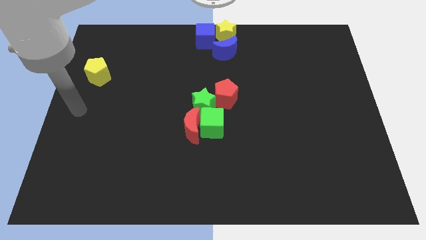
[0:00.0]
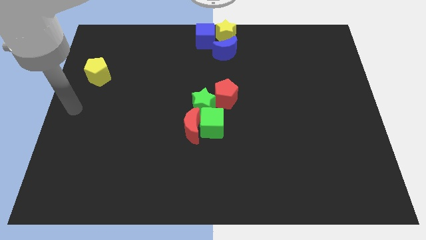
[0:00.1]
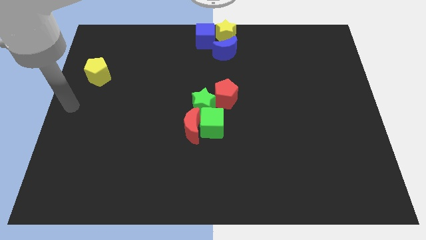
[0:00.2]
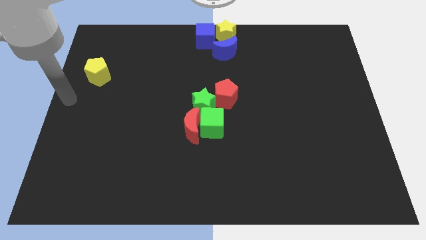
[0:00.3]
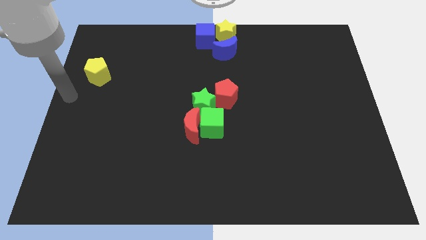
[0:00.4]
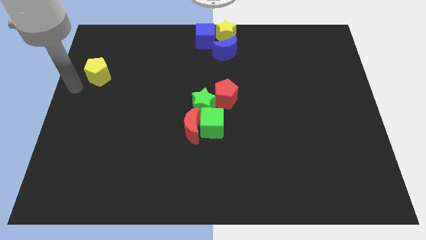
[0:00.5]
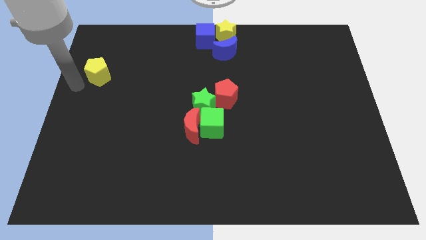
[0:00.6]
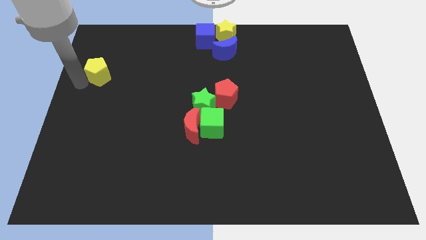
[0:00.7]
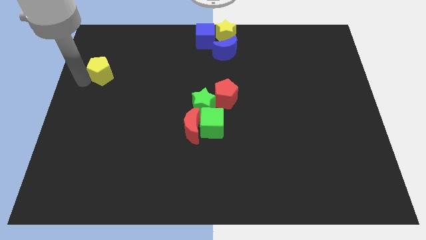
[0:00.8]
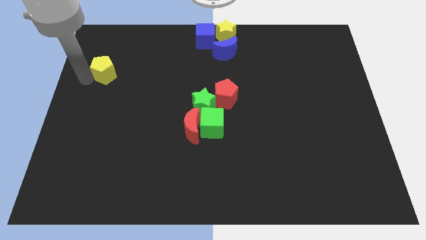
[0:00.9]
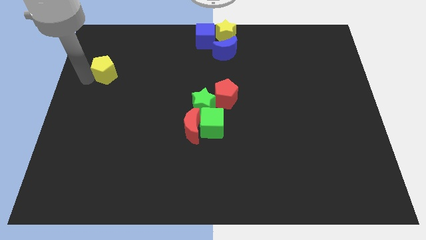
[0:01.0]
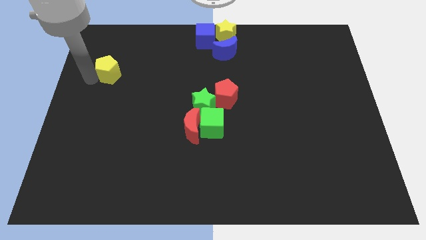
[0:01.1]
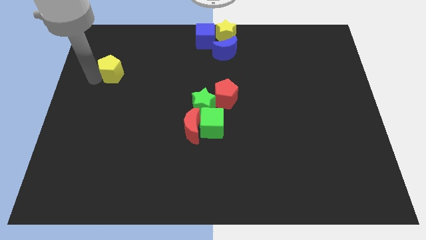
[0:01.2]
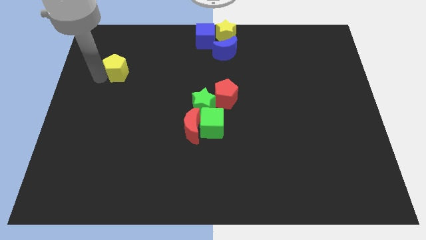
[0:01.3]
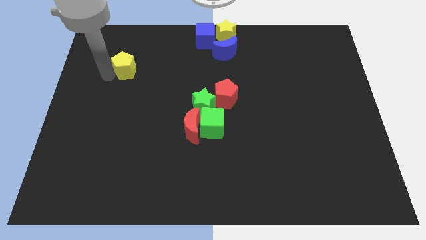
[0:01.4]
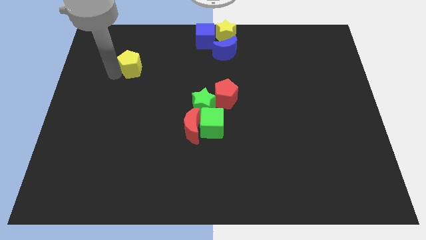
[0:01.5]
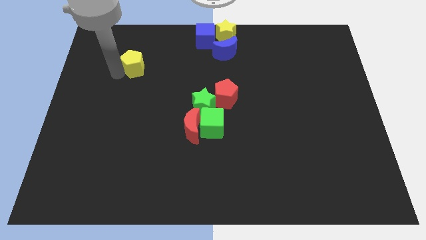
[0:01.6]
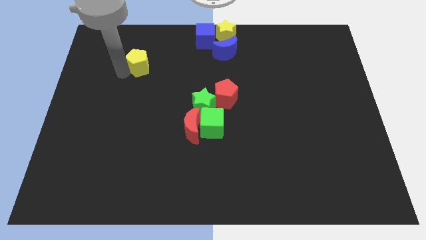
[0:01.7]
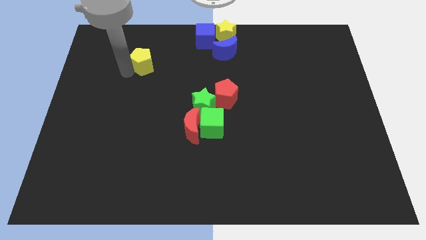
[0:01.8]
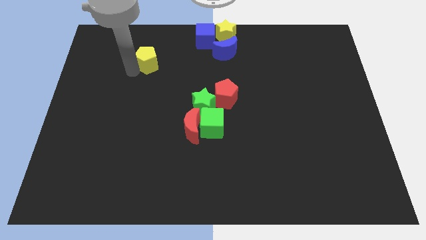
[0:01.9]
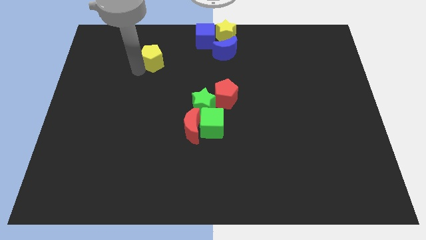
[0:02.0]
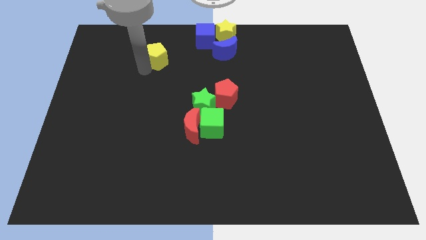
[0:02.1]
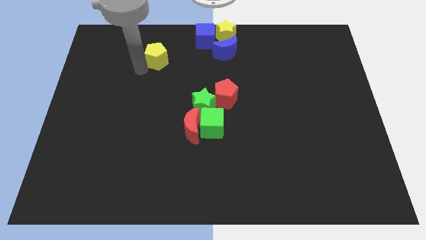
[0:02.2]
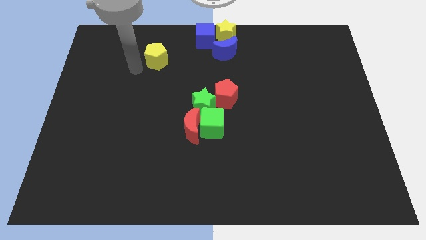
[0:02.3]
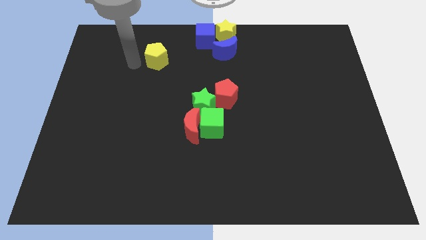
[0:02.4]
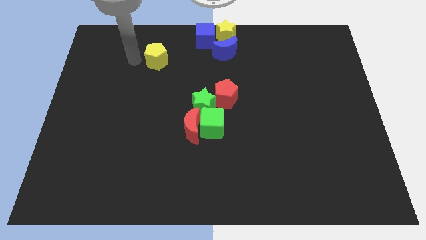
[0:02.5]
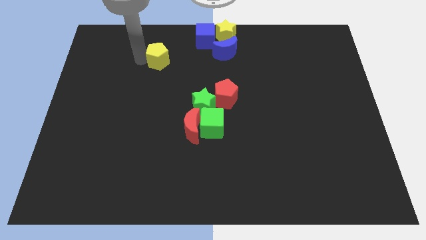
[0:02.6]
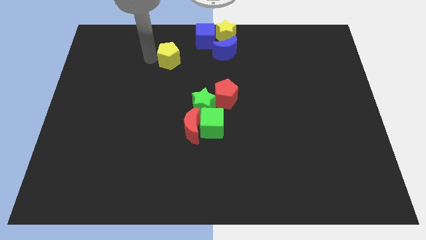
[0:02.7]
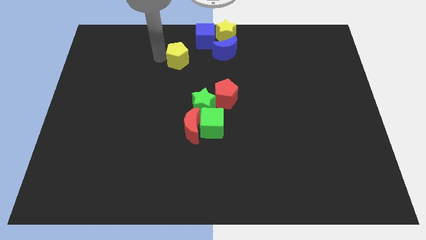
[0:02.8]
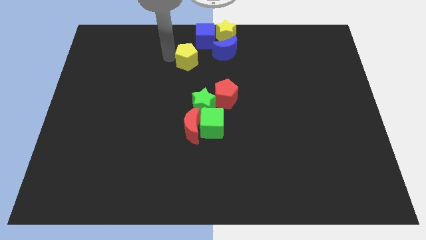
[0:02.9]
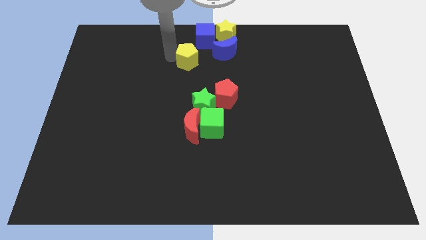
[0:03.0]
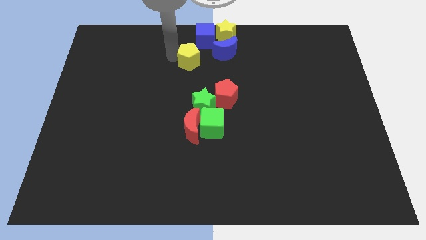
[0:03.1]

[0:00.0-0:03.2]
move yellow pentagon towards blue blocks

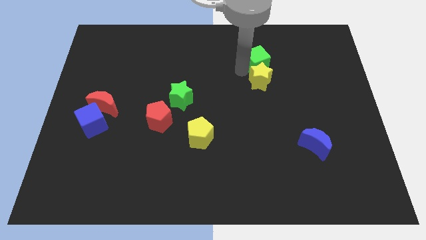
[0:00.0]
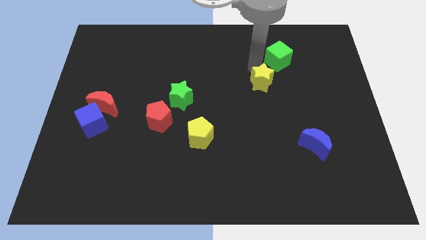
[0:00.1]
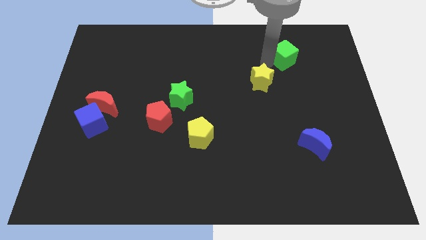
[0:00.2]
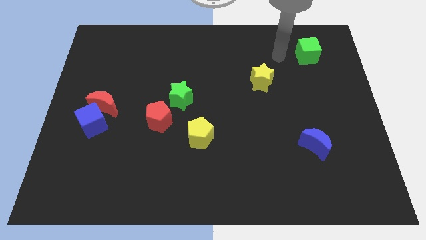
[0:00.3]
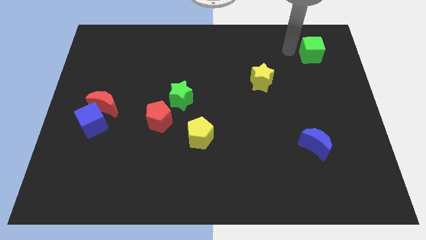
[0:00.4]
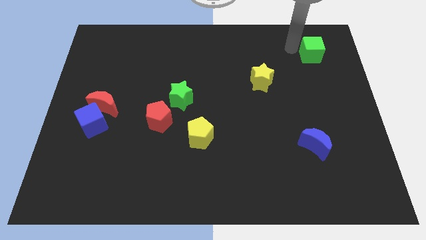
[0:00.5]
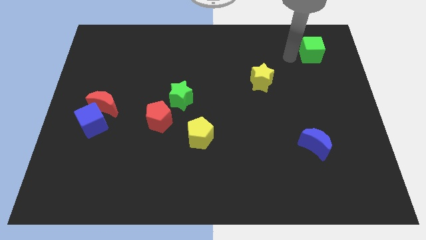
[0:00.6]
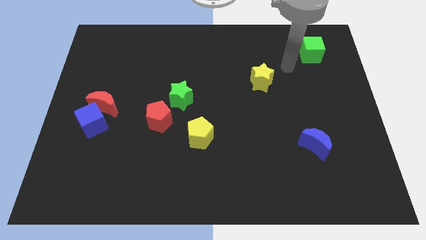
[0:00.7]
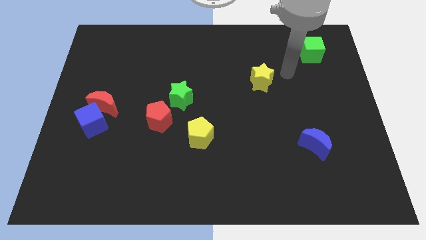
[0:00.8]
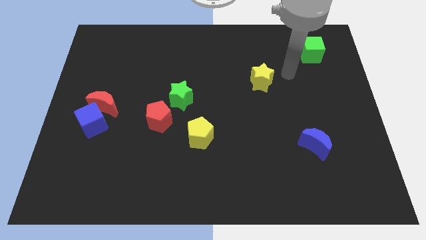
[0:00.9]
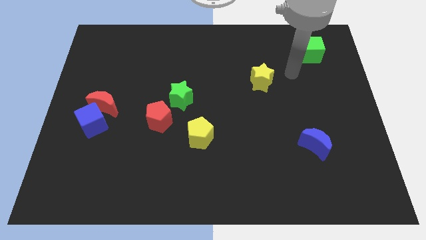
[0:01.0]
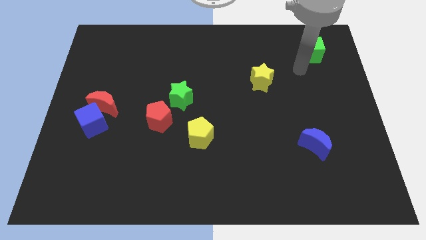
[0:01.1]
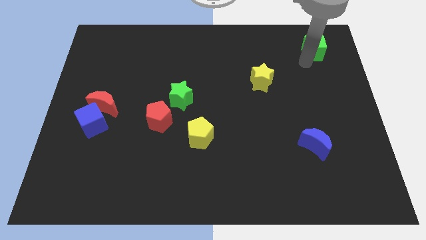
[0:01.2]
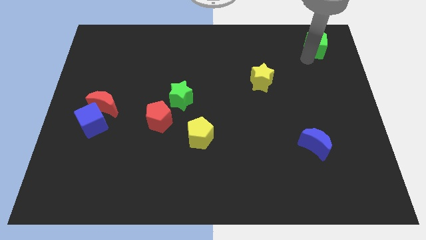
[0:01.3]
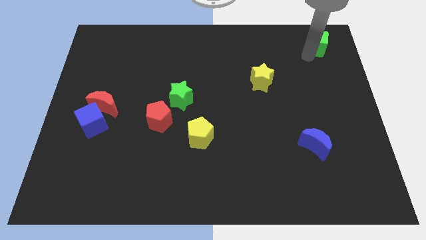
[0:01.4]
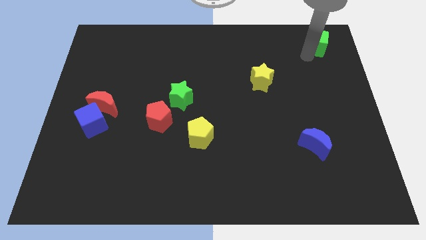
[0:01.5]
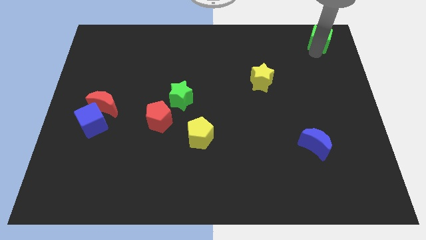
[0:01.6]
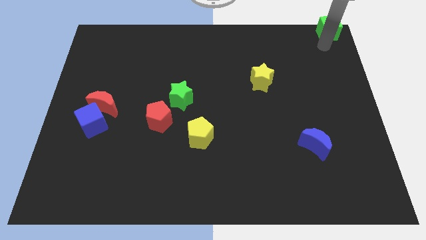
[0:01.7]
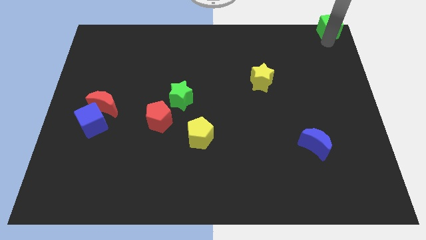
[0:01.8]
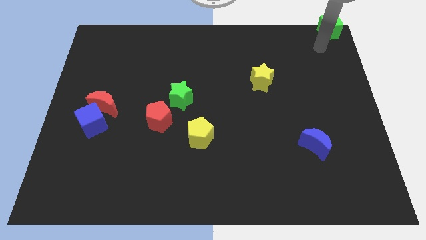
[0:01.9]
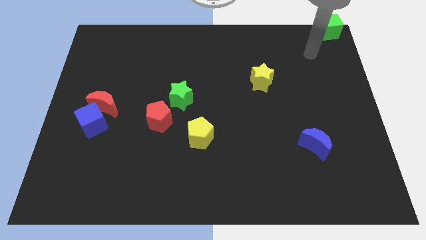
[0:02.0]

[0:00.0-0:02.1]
place the green cube to top right corner of the board

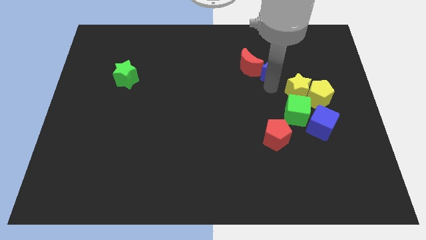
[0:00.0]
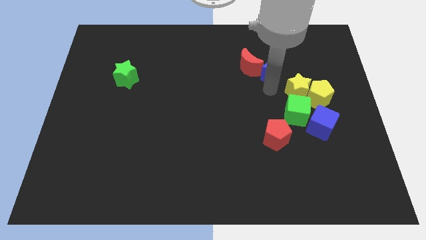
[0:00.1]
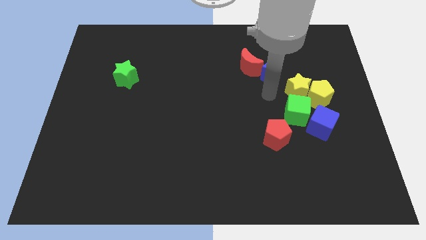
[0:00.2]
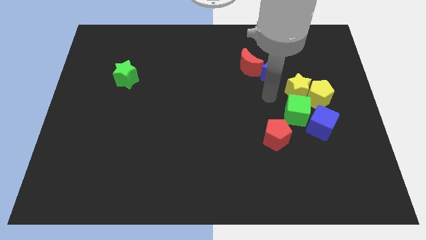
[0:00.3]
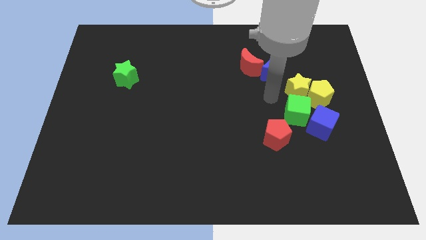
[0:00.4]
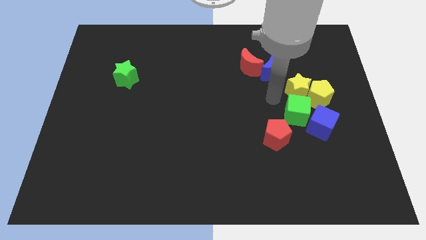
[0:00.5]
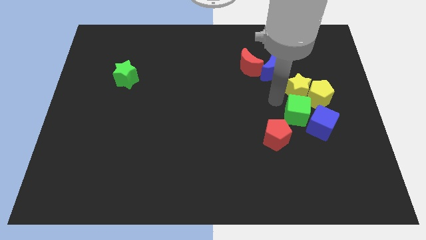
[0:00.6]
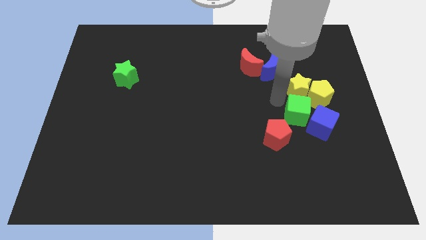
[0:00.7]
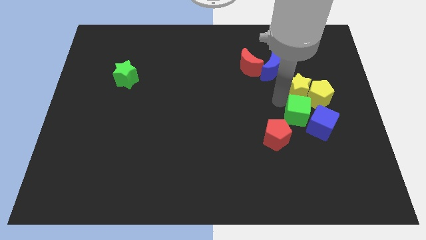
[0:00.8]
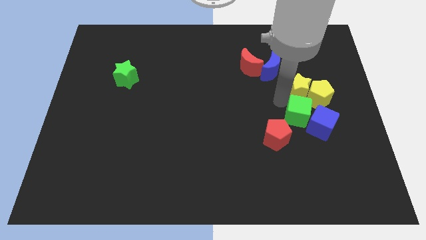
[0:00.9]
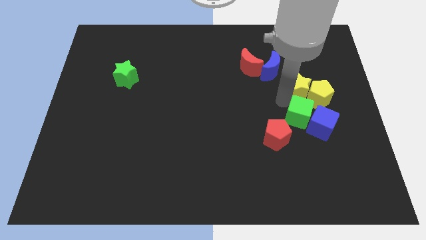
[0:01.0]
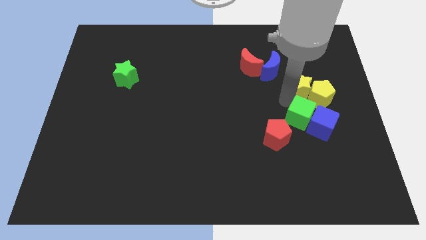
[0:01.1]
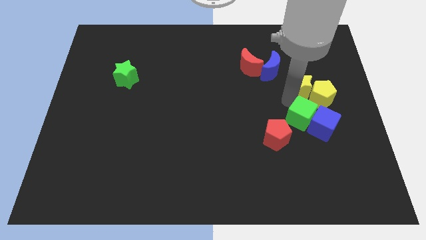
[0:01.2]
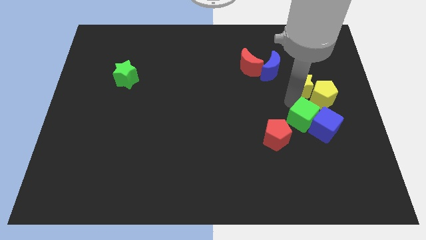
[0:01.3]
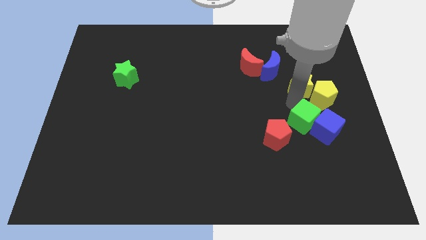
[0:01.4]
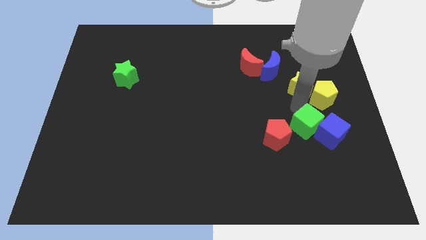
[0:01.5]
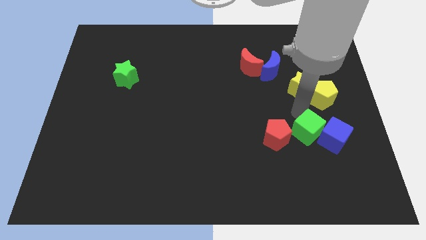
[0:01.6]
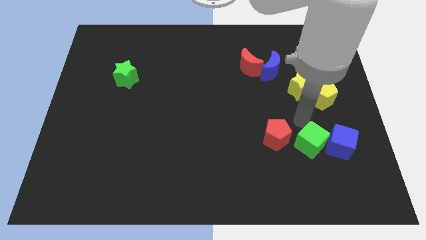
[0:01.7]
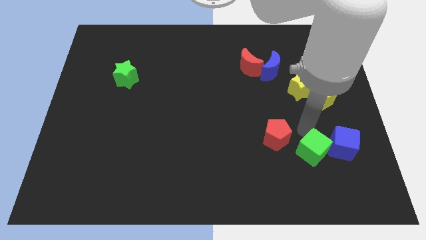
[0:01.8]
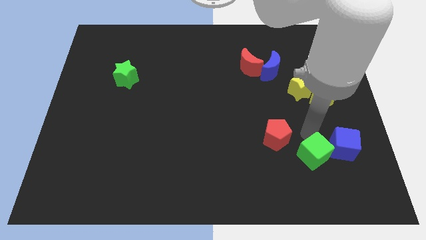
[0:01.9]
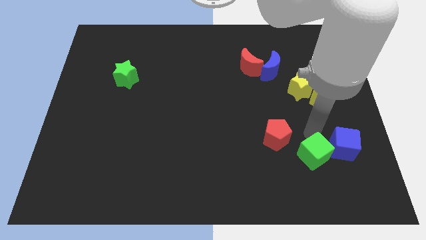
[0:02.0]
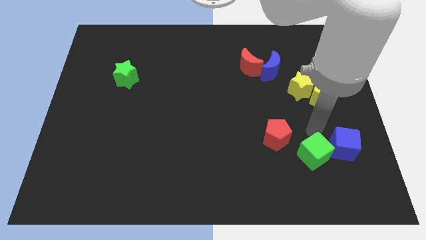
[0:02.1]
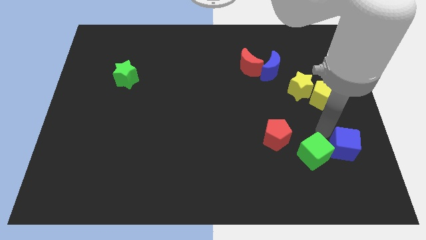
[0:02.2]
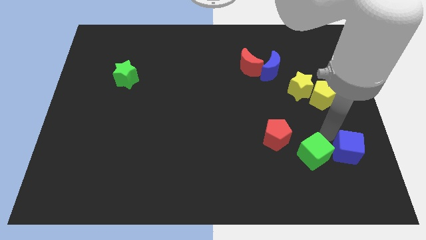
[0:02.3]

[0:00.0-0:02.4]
move the green cube away from the yellow star

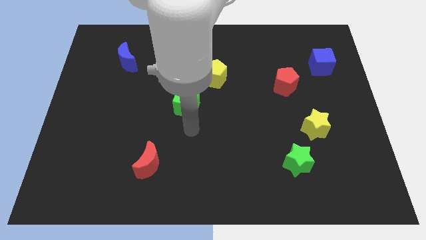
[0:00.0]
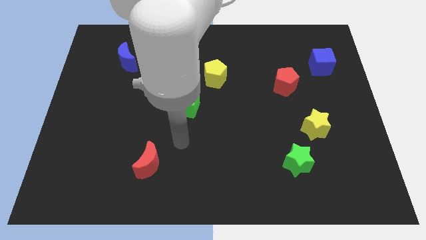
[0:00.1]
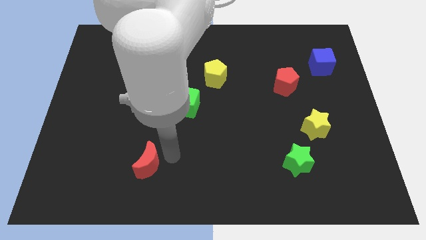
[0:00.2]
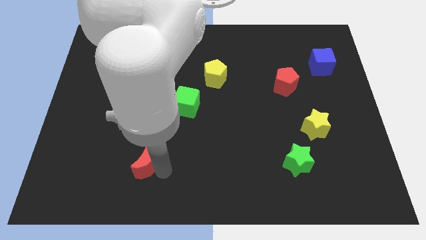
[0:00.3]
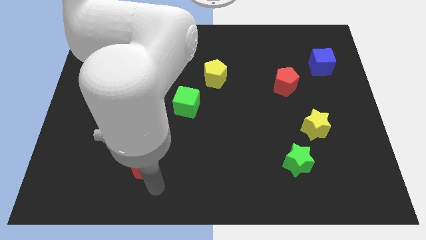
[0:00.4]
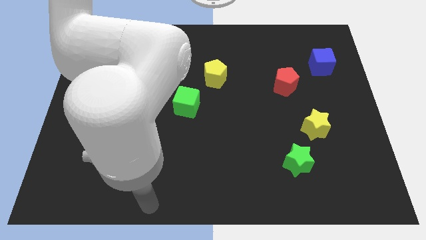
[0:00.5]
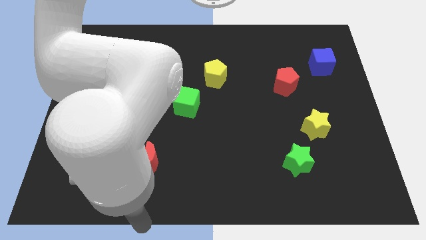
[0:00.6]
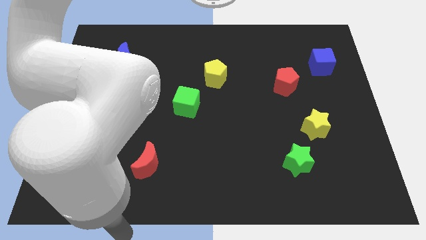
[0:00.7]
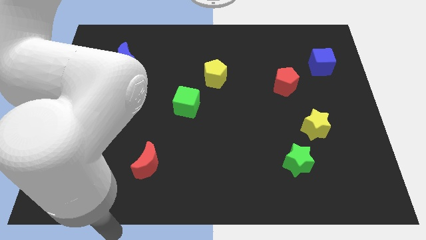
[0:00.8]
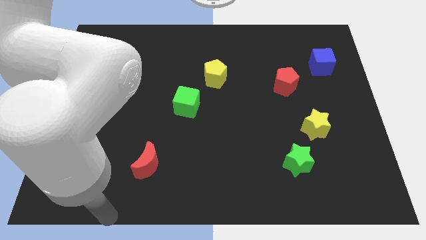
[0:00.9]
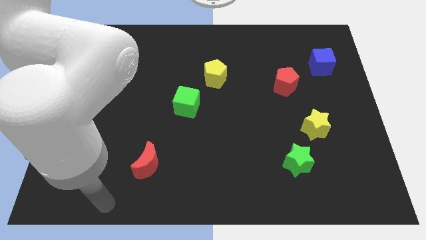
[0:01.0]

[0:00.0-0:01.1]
move the arm away from the green cube
